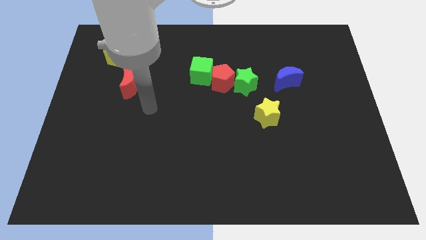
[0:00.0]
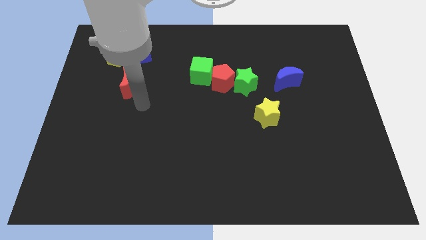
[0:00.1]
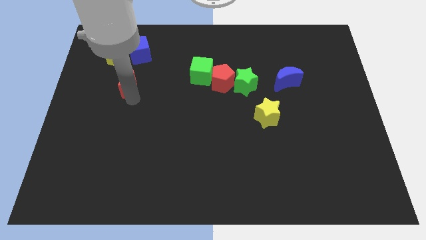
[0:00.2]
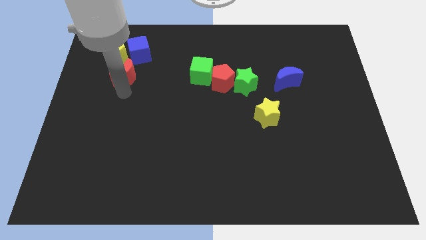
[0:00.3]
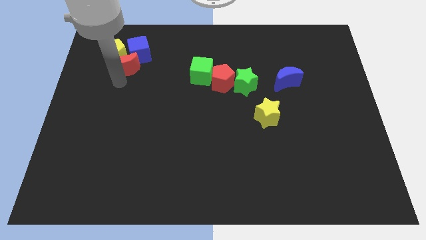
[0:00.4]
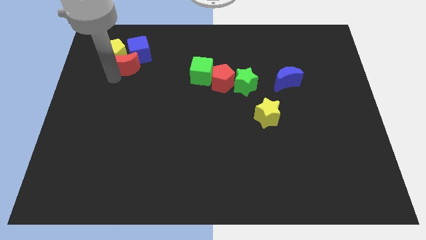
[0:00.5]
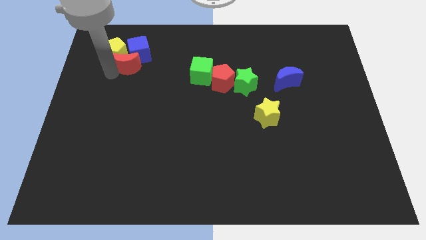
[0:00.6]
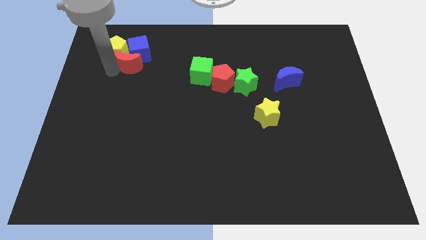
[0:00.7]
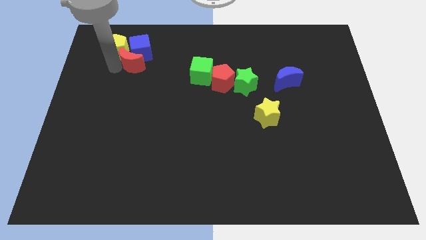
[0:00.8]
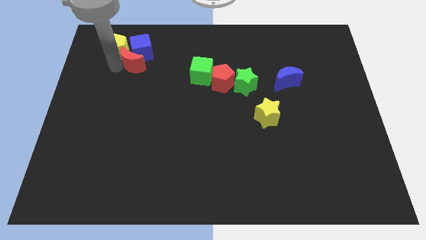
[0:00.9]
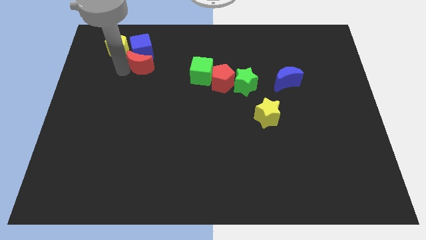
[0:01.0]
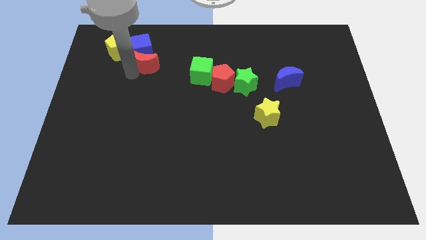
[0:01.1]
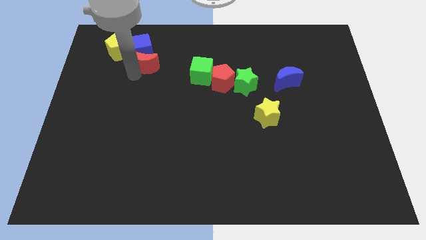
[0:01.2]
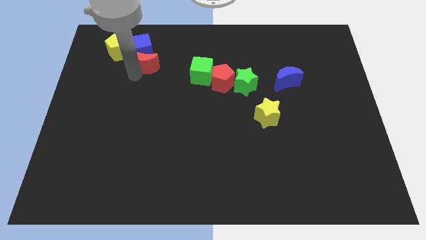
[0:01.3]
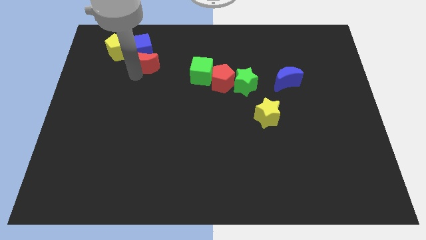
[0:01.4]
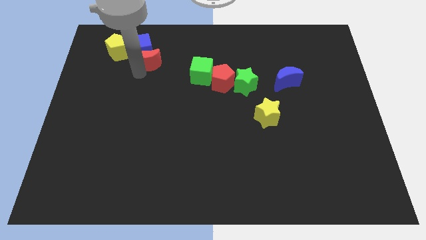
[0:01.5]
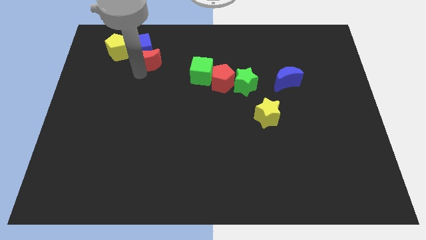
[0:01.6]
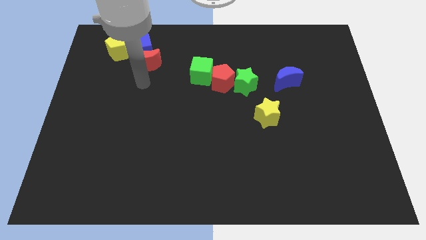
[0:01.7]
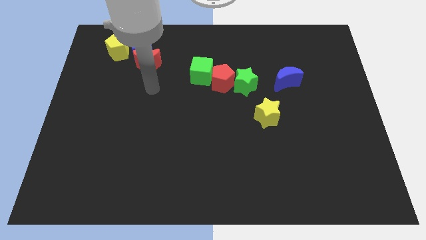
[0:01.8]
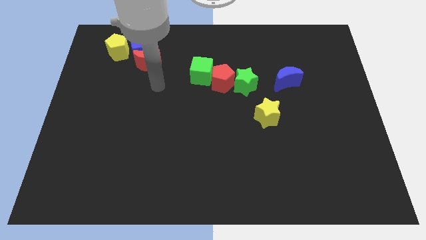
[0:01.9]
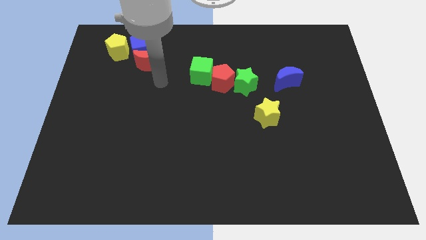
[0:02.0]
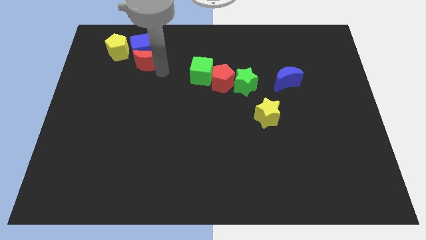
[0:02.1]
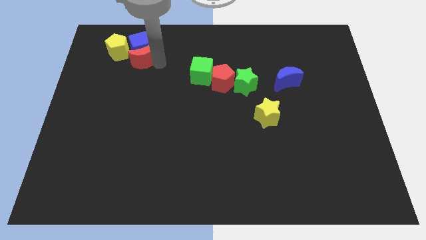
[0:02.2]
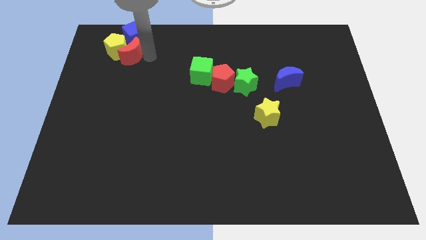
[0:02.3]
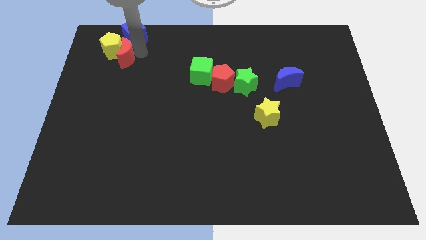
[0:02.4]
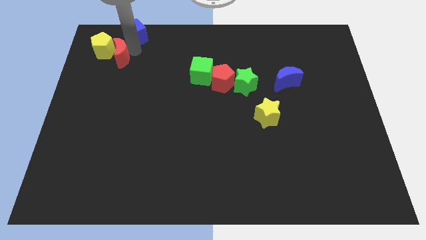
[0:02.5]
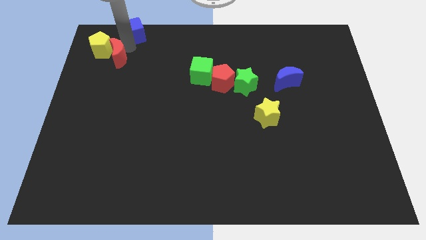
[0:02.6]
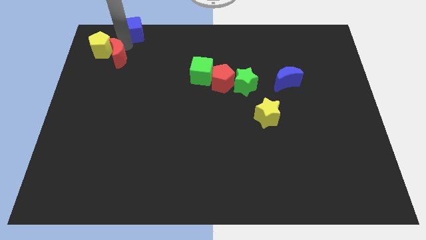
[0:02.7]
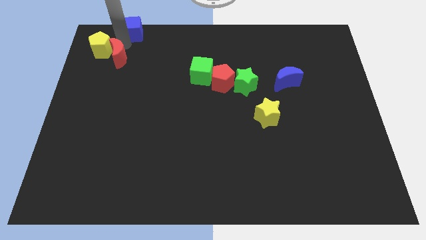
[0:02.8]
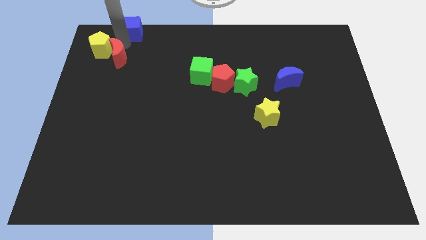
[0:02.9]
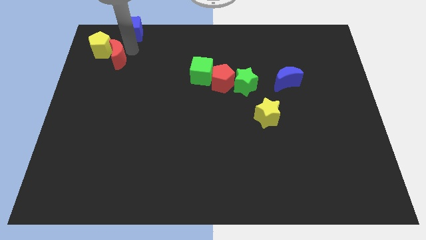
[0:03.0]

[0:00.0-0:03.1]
place the red moon right to the yellow pentagon

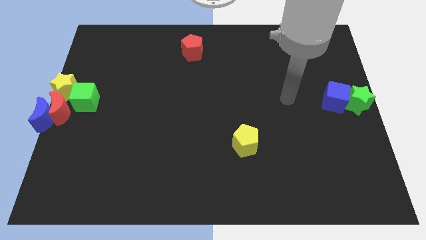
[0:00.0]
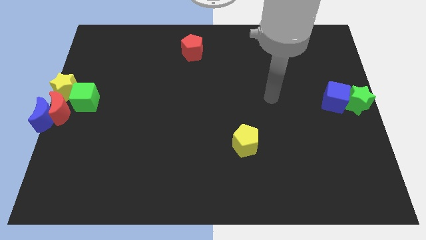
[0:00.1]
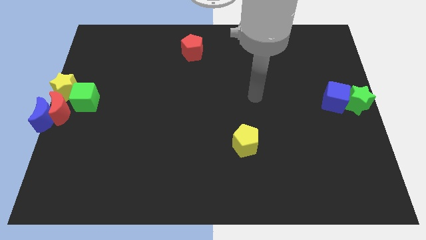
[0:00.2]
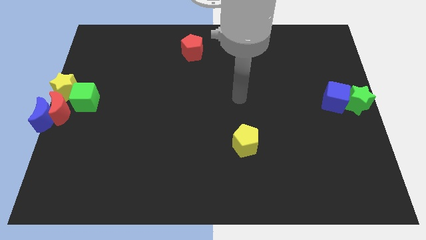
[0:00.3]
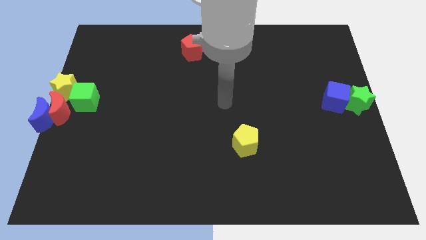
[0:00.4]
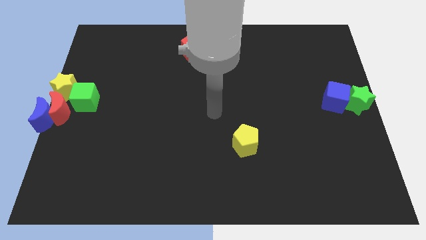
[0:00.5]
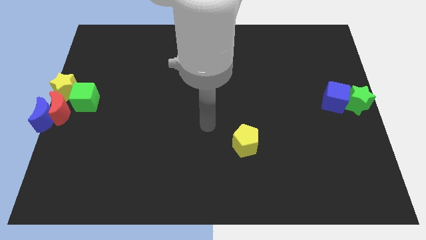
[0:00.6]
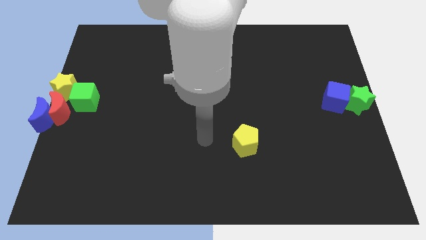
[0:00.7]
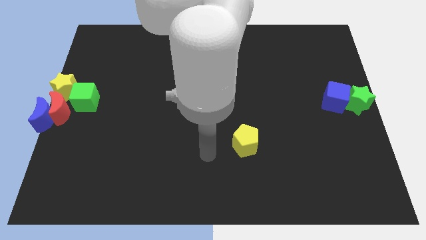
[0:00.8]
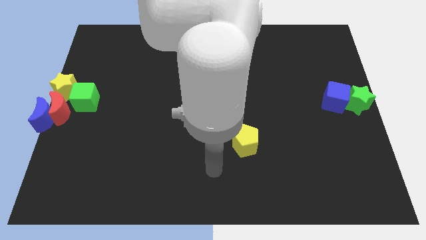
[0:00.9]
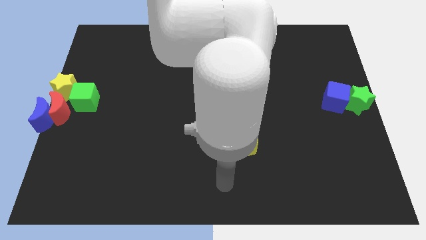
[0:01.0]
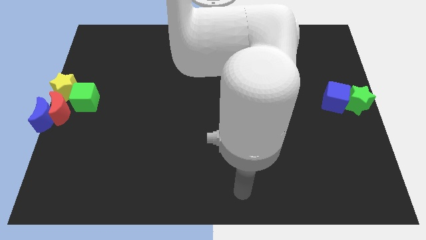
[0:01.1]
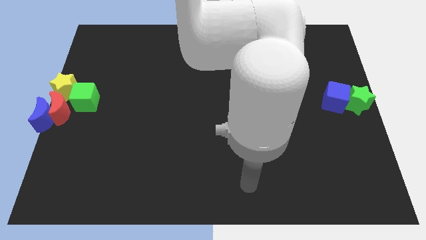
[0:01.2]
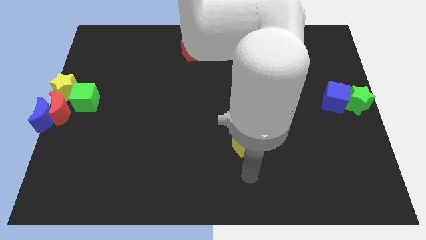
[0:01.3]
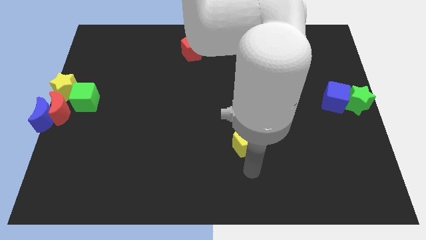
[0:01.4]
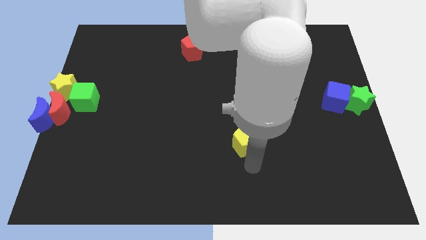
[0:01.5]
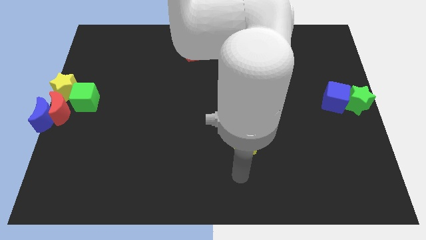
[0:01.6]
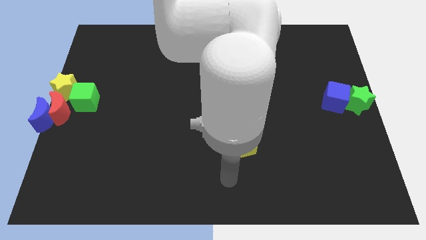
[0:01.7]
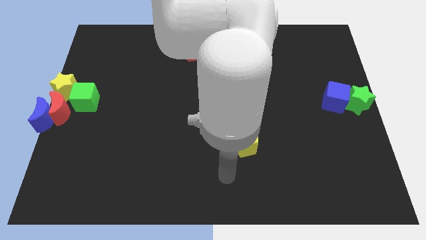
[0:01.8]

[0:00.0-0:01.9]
move the arm to the bottom left of the yellow pentagon

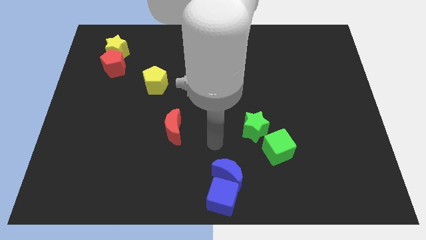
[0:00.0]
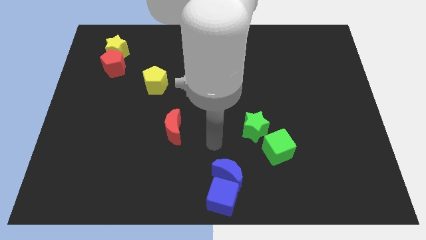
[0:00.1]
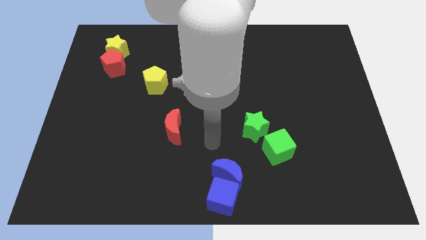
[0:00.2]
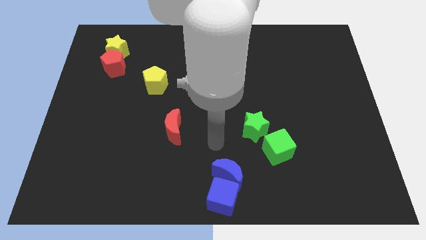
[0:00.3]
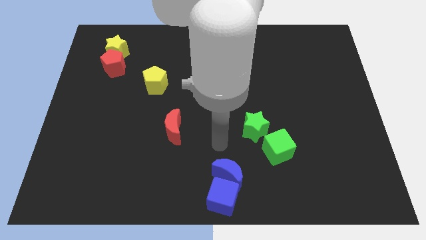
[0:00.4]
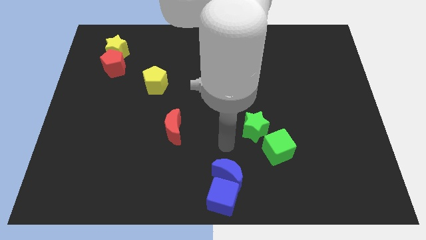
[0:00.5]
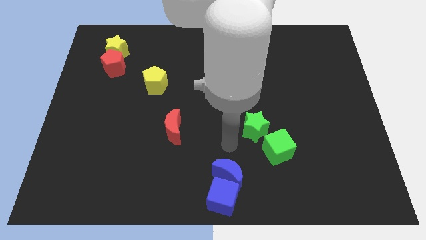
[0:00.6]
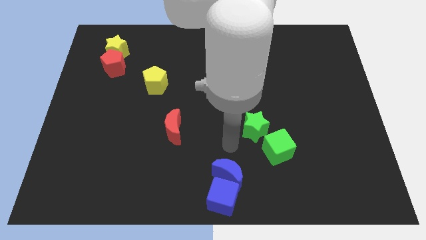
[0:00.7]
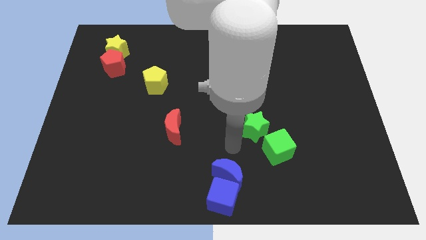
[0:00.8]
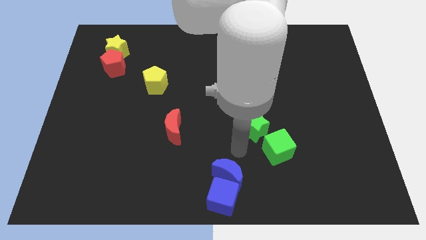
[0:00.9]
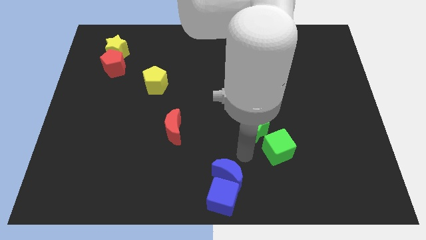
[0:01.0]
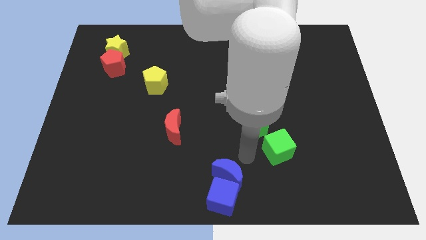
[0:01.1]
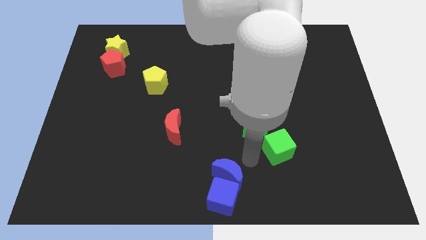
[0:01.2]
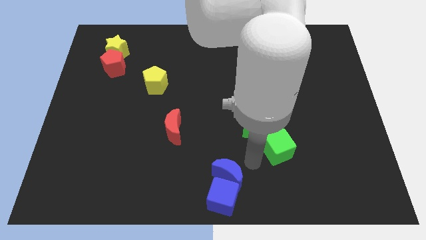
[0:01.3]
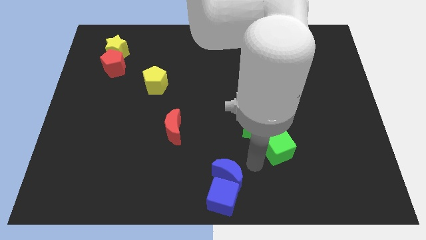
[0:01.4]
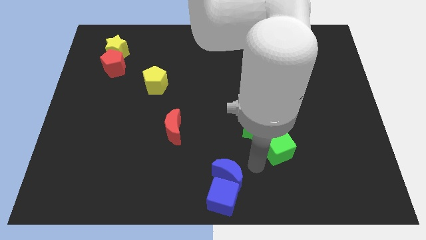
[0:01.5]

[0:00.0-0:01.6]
move your arm towards the green cube

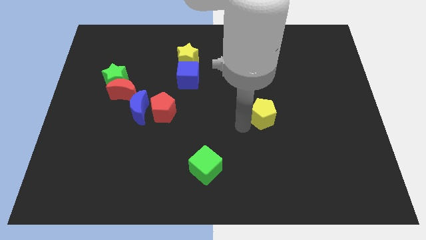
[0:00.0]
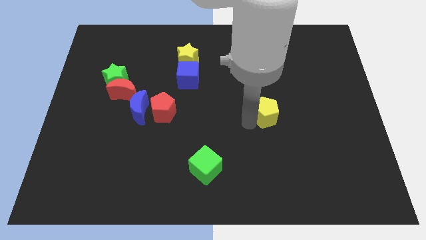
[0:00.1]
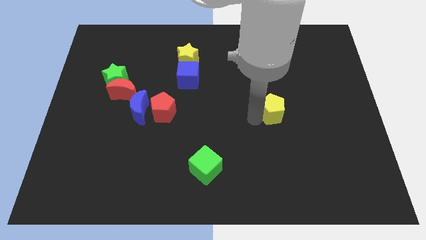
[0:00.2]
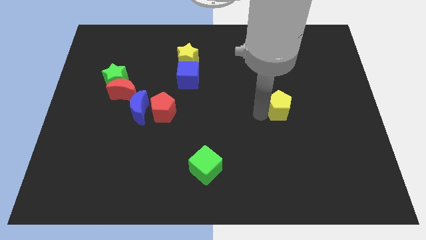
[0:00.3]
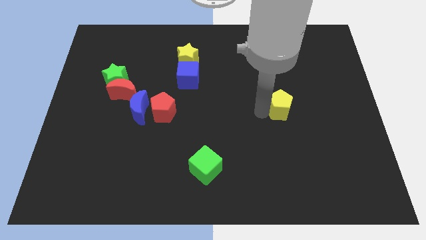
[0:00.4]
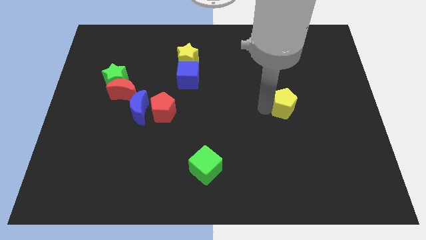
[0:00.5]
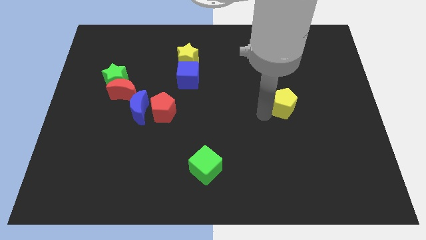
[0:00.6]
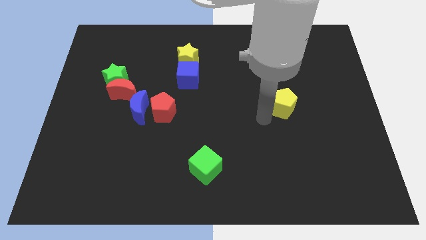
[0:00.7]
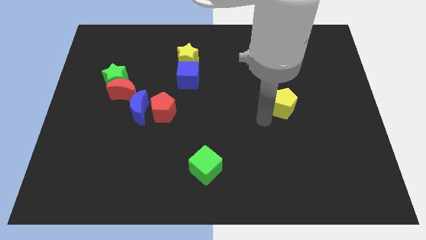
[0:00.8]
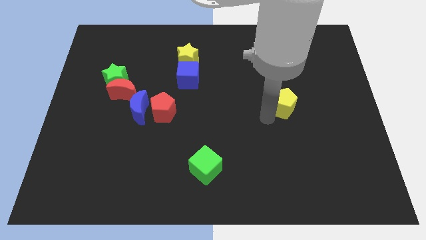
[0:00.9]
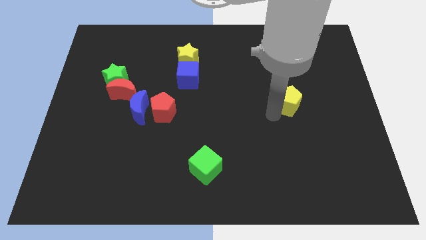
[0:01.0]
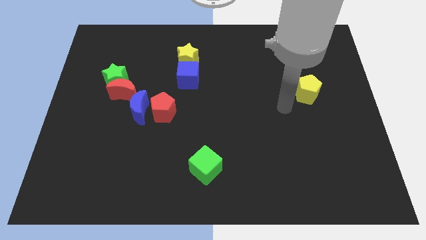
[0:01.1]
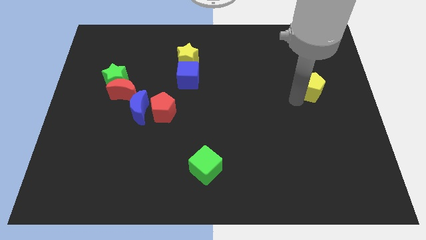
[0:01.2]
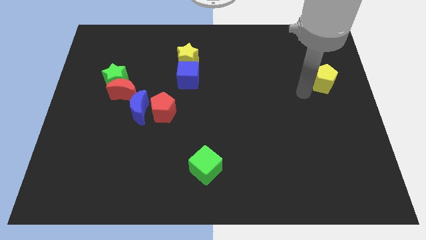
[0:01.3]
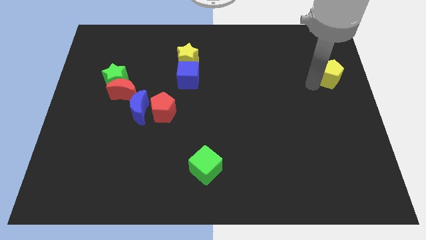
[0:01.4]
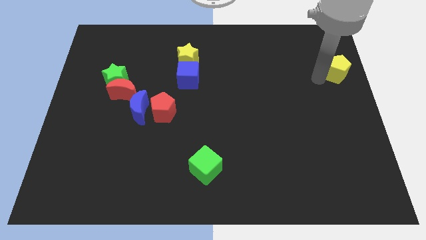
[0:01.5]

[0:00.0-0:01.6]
move the yellow pentagon to the right of the blue cube

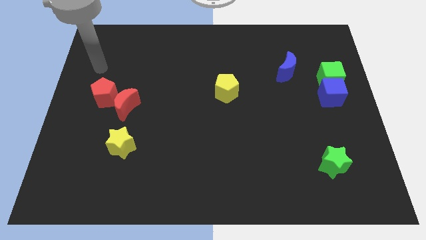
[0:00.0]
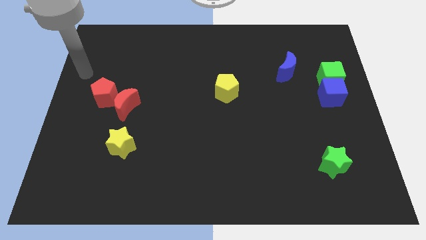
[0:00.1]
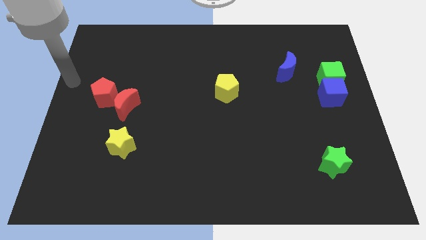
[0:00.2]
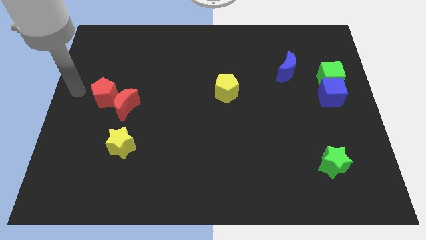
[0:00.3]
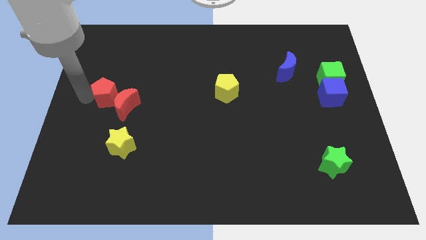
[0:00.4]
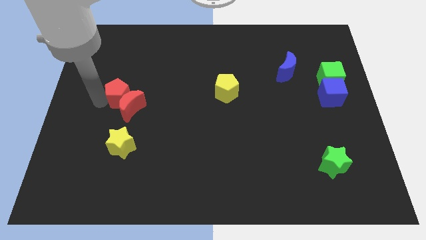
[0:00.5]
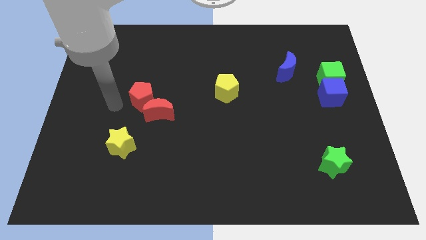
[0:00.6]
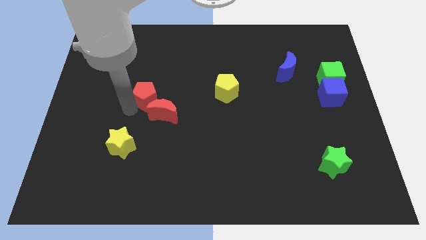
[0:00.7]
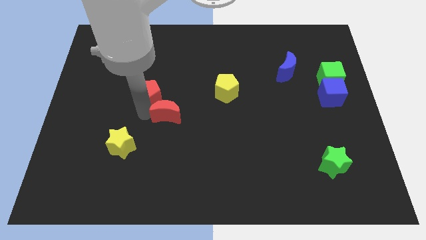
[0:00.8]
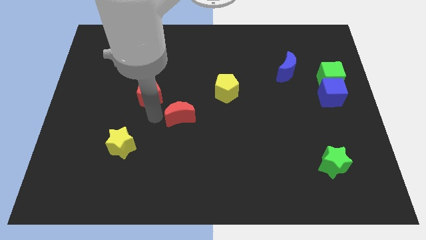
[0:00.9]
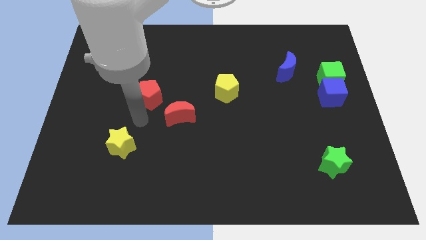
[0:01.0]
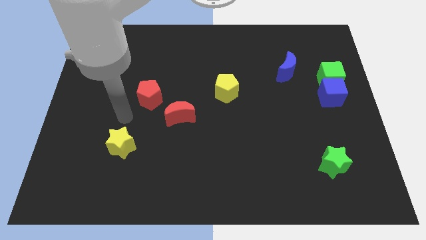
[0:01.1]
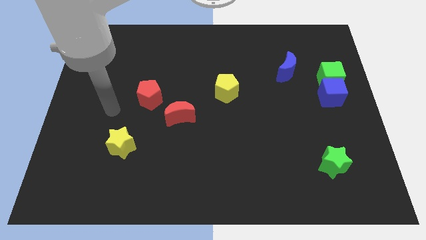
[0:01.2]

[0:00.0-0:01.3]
place the red moon in between the yellow pentagon and yellow star
